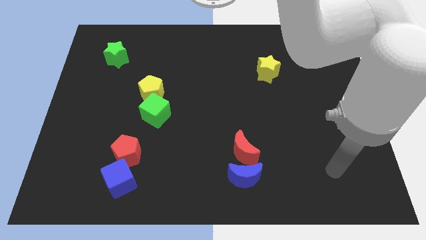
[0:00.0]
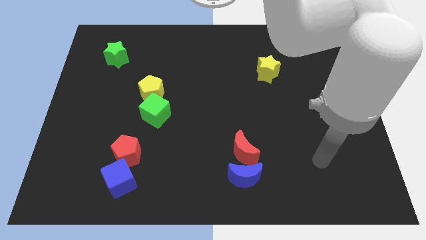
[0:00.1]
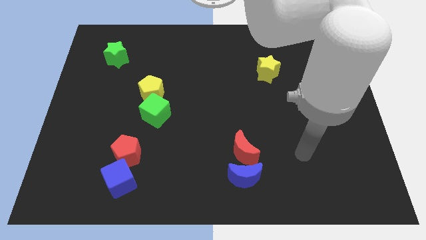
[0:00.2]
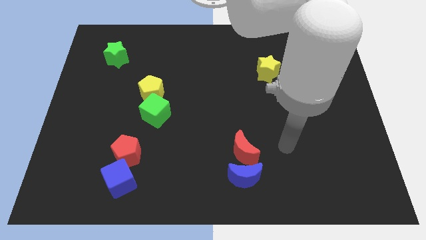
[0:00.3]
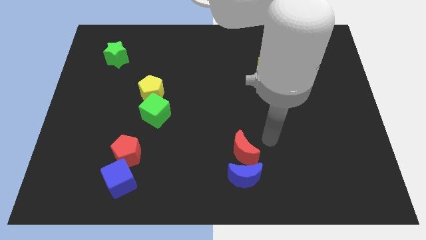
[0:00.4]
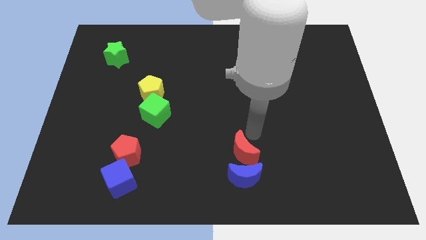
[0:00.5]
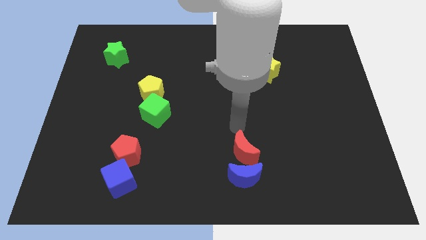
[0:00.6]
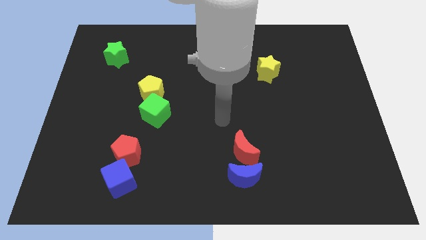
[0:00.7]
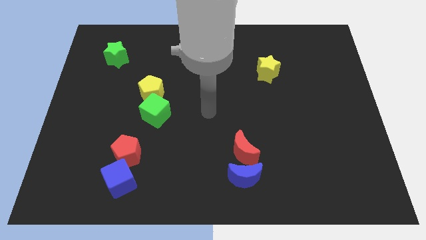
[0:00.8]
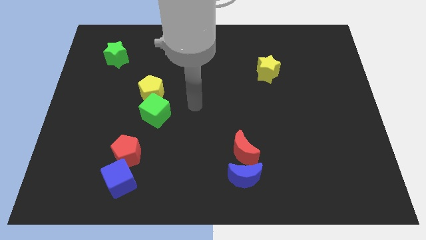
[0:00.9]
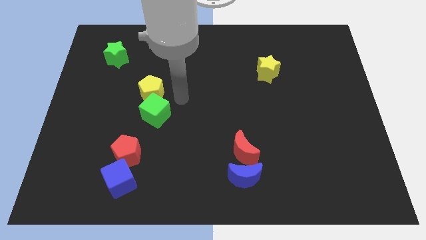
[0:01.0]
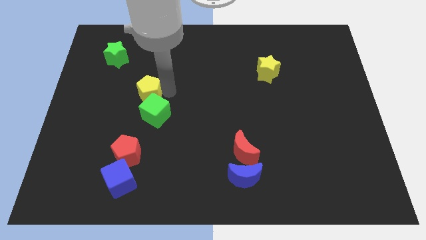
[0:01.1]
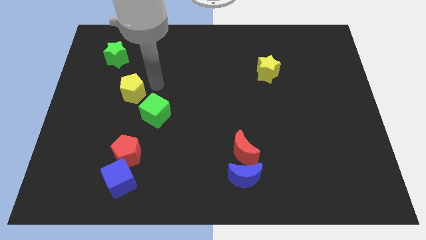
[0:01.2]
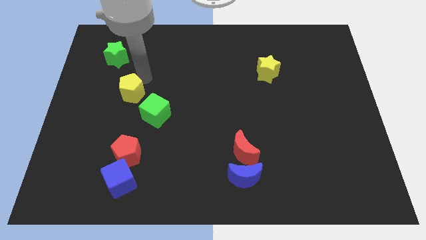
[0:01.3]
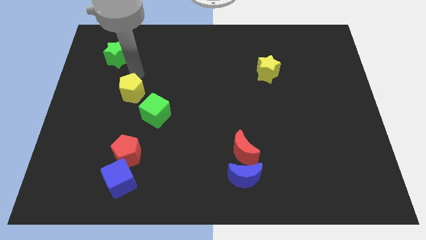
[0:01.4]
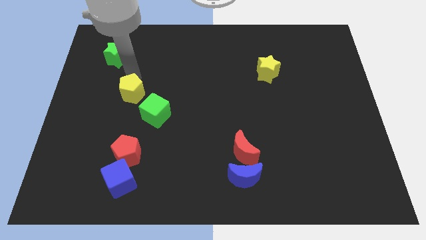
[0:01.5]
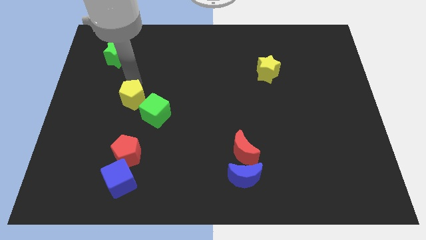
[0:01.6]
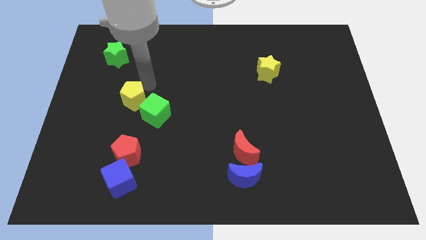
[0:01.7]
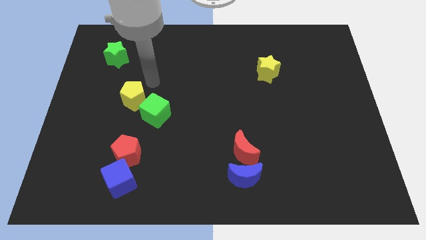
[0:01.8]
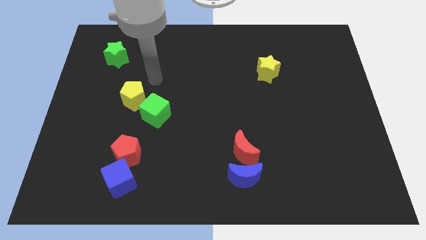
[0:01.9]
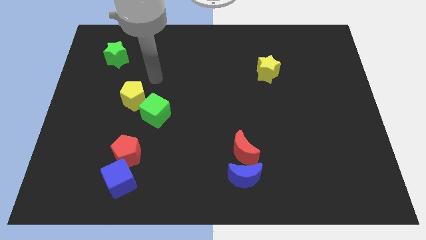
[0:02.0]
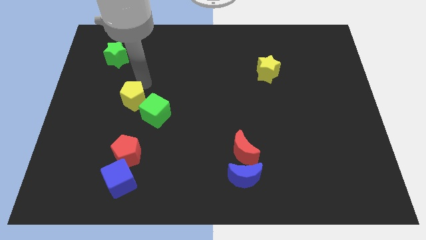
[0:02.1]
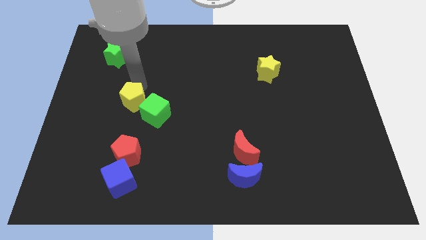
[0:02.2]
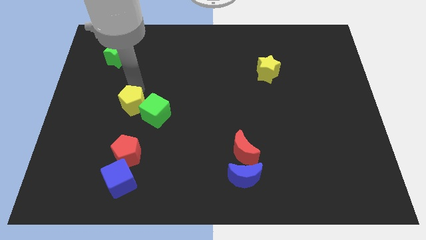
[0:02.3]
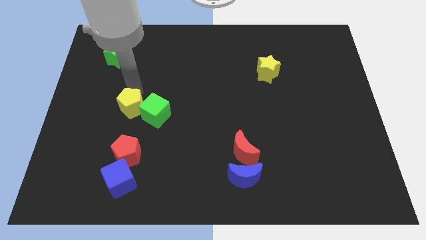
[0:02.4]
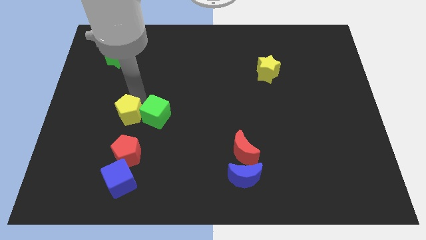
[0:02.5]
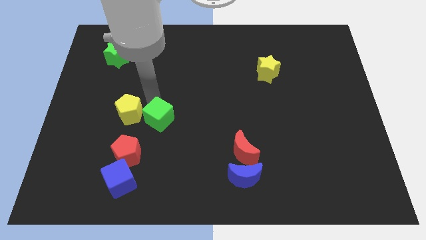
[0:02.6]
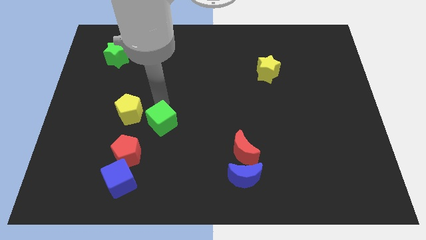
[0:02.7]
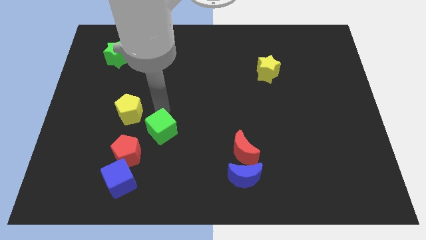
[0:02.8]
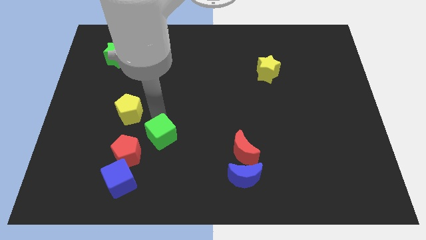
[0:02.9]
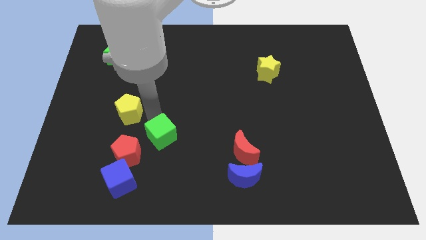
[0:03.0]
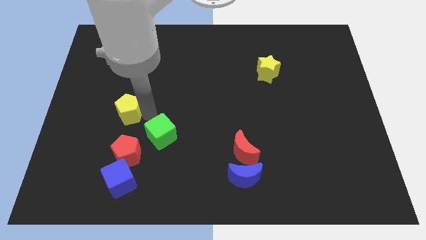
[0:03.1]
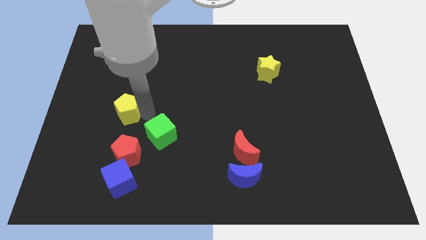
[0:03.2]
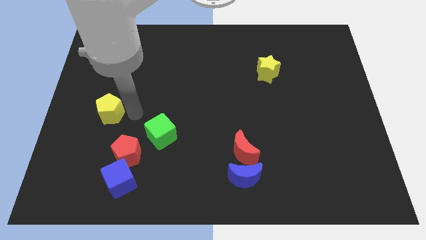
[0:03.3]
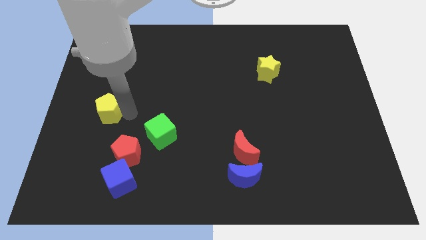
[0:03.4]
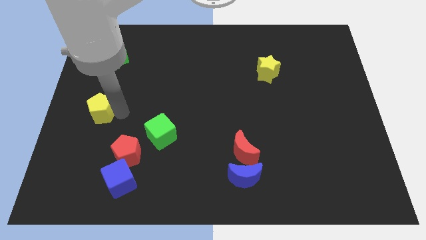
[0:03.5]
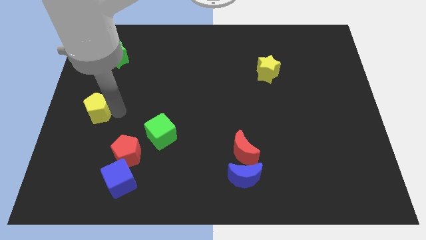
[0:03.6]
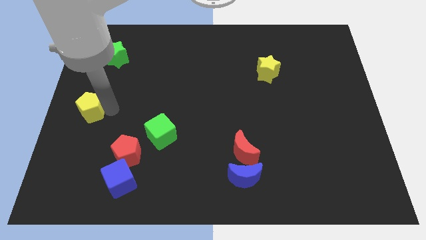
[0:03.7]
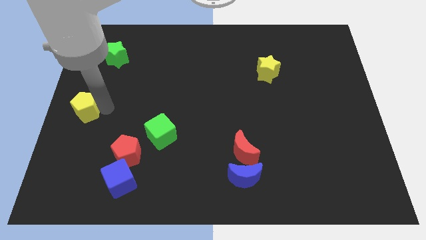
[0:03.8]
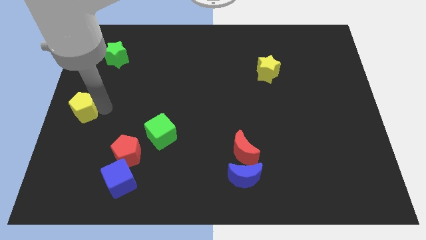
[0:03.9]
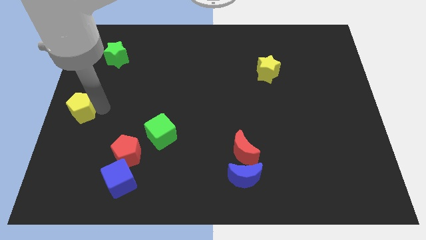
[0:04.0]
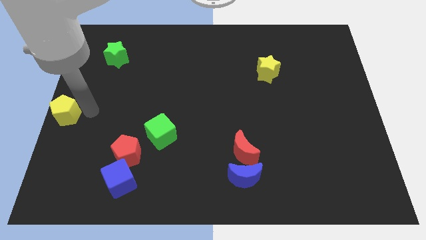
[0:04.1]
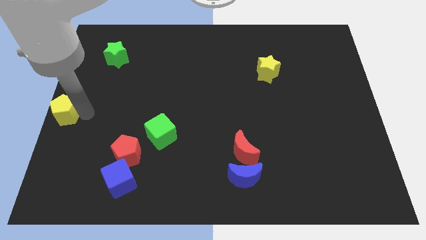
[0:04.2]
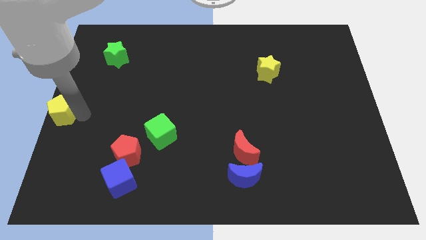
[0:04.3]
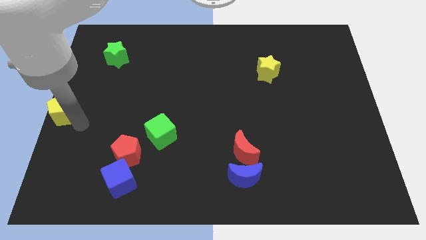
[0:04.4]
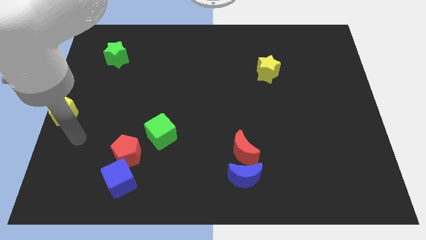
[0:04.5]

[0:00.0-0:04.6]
move the yellow pentagon to the left center of the board

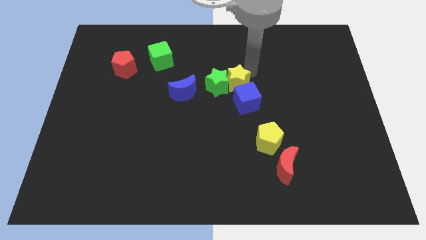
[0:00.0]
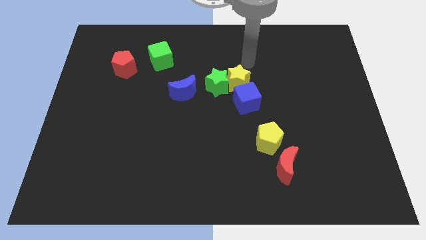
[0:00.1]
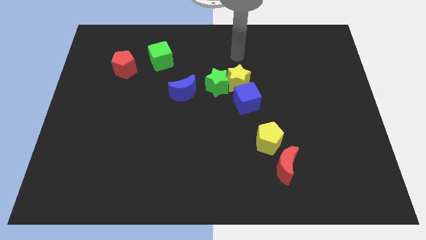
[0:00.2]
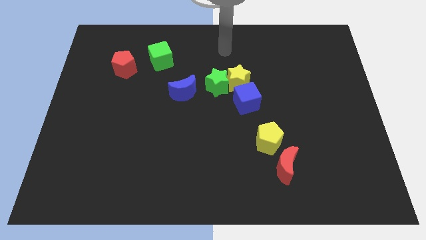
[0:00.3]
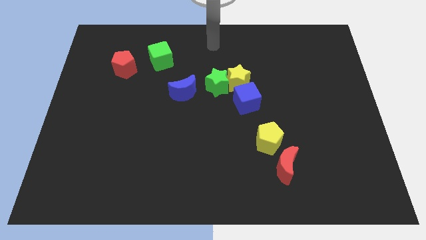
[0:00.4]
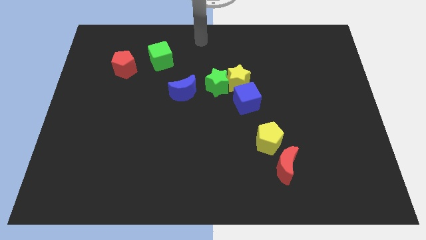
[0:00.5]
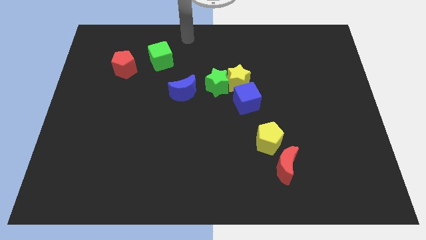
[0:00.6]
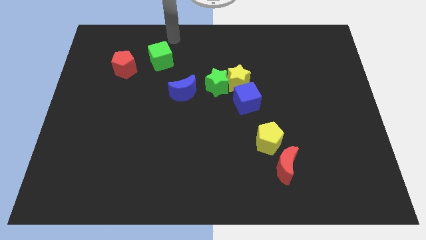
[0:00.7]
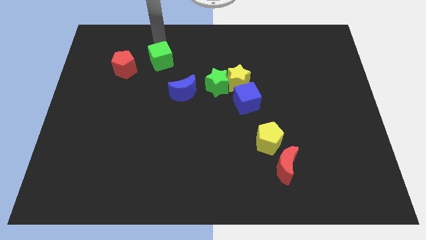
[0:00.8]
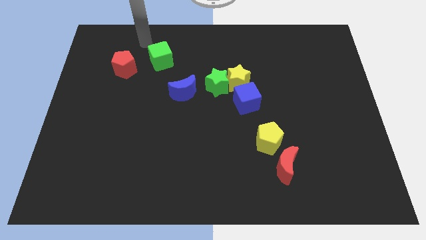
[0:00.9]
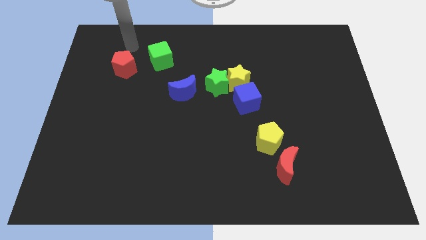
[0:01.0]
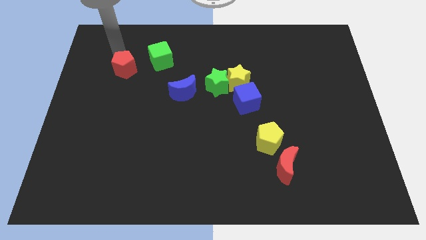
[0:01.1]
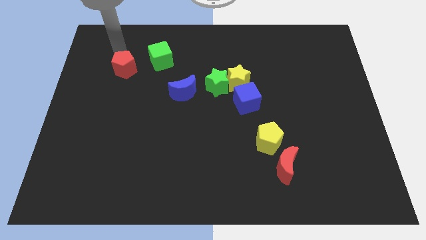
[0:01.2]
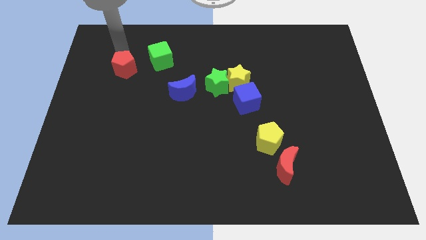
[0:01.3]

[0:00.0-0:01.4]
place your hand at the top of the red pentagon

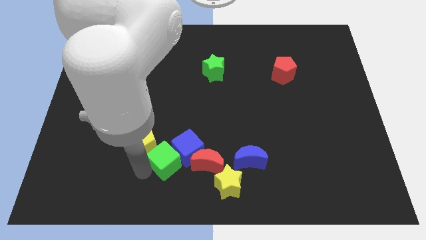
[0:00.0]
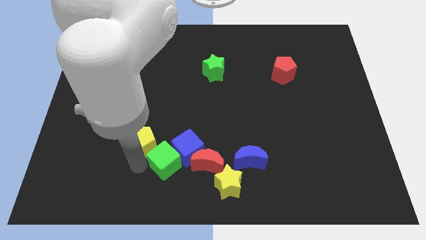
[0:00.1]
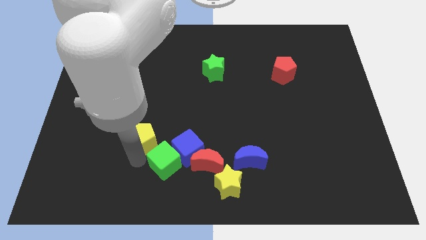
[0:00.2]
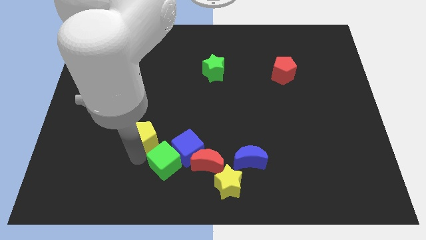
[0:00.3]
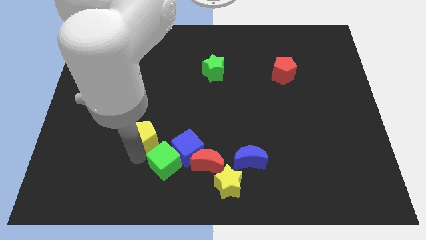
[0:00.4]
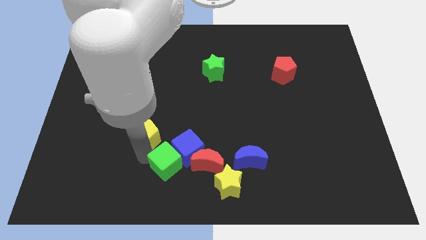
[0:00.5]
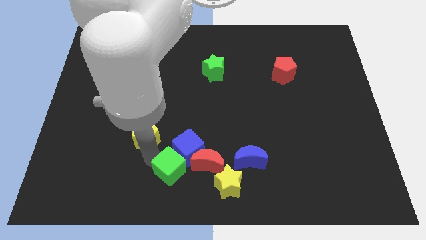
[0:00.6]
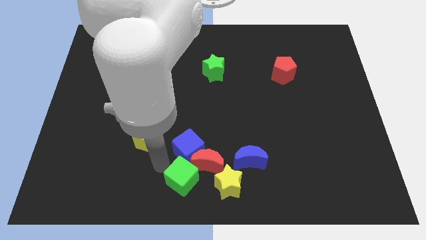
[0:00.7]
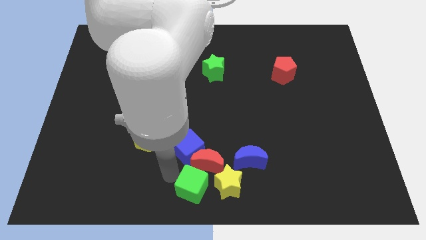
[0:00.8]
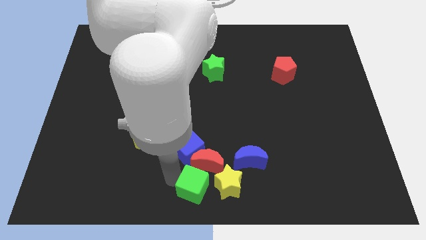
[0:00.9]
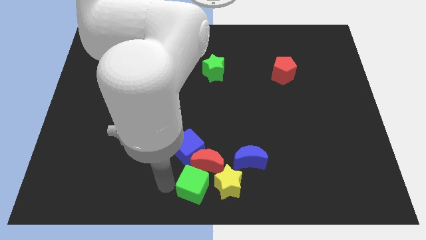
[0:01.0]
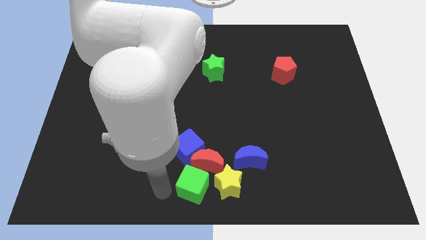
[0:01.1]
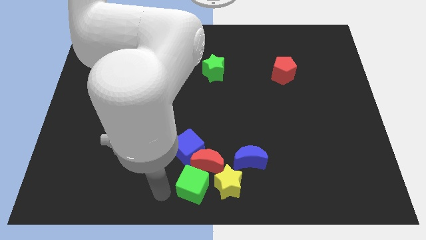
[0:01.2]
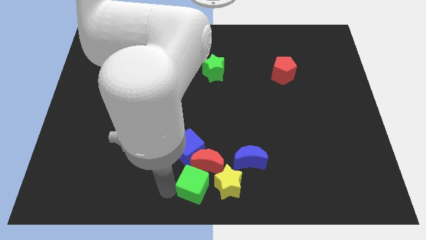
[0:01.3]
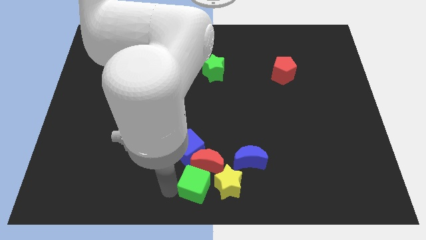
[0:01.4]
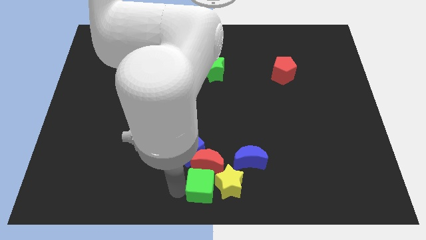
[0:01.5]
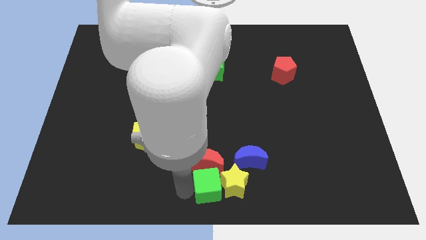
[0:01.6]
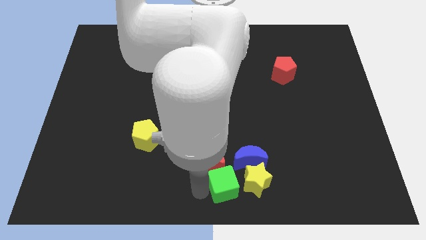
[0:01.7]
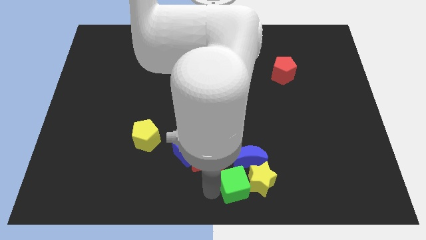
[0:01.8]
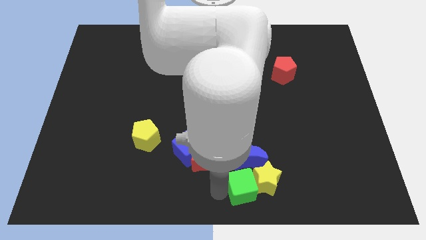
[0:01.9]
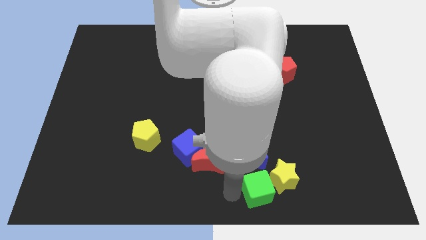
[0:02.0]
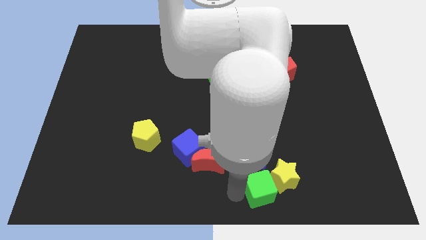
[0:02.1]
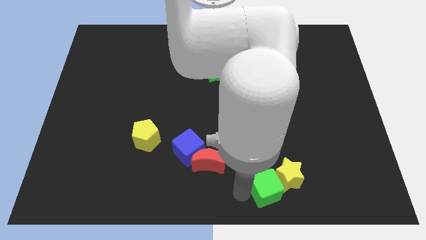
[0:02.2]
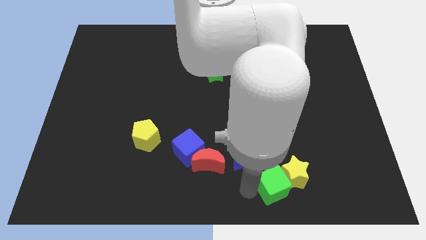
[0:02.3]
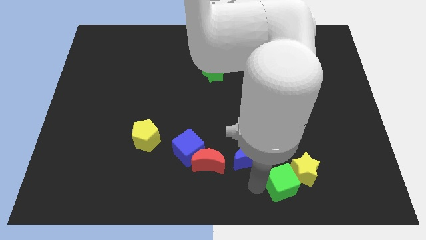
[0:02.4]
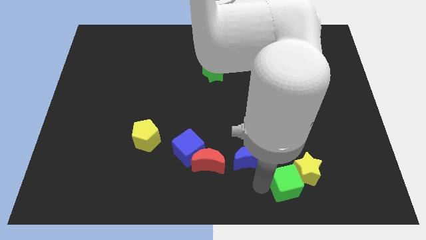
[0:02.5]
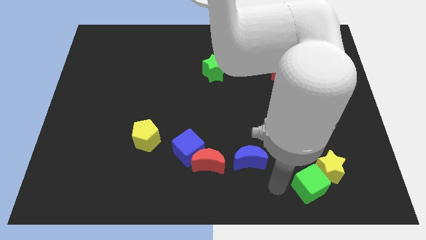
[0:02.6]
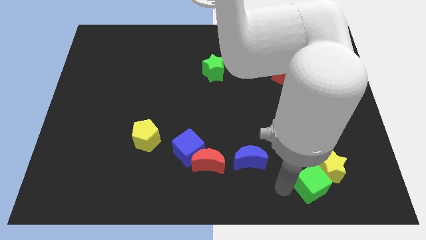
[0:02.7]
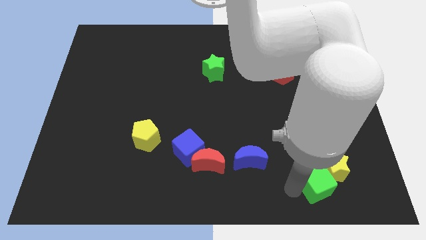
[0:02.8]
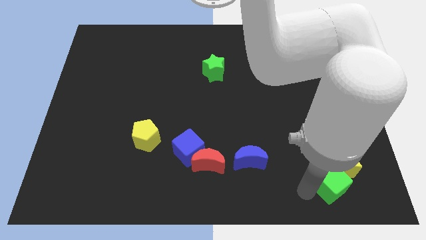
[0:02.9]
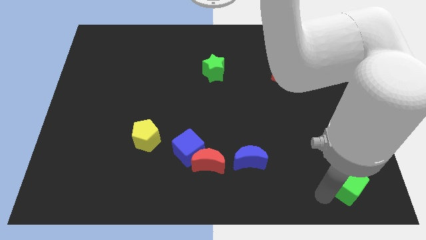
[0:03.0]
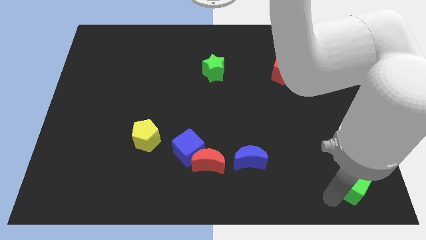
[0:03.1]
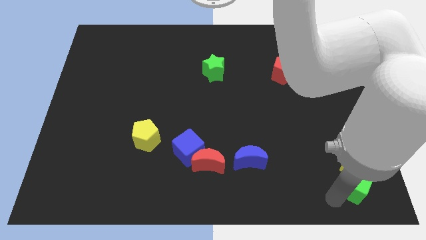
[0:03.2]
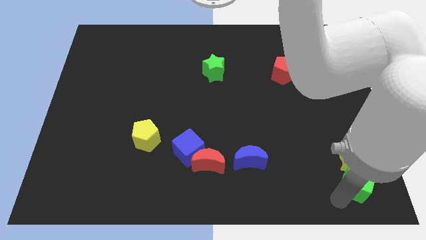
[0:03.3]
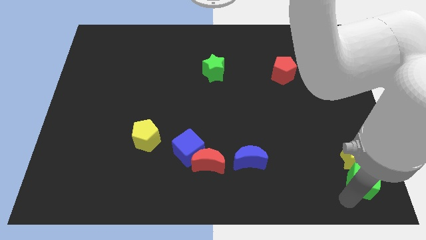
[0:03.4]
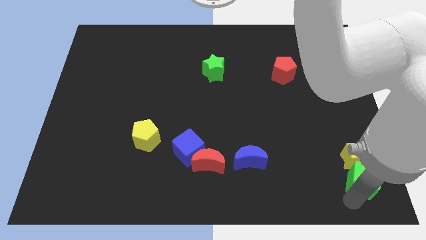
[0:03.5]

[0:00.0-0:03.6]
push the green cube into the yellow star and move them to the right
